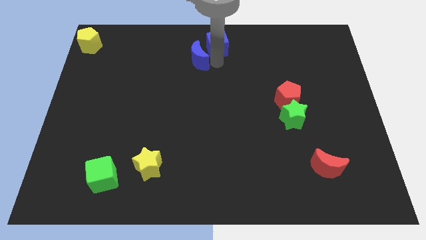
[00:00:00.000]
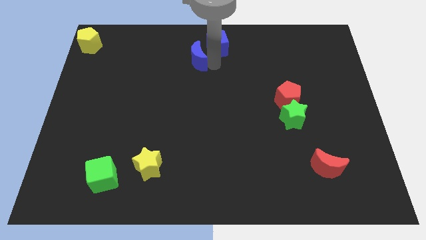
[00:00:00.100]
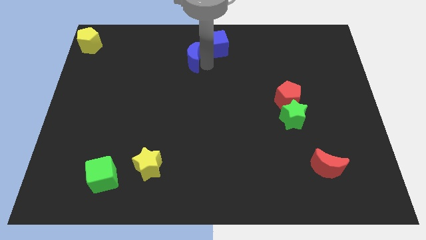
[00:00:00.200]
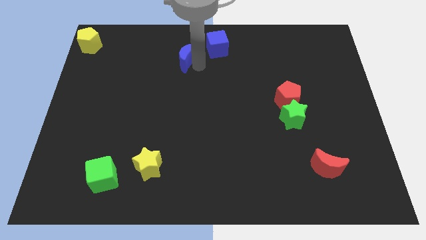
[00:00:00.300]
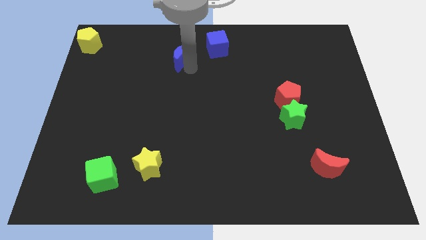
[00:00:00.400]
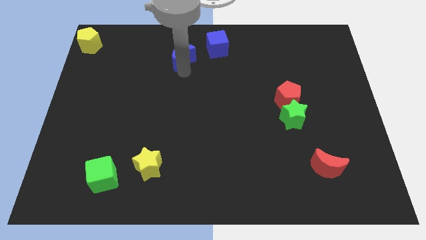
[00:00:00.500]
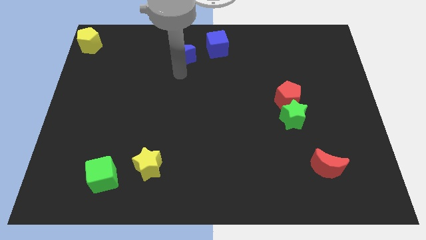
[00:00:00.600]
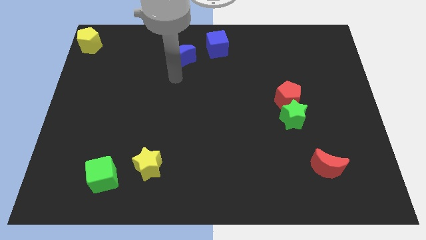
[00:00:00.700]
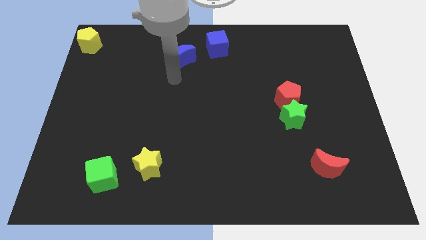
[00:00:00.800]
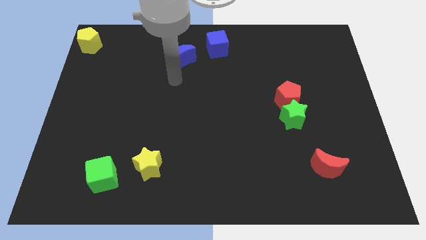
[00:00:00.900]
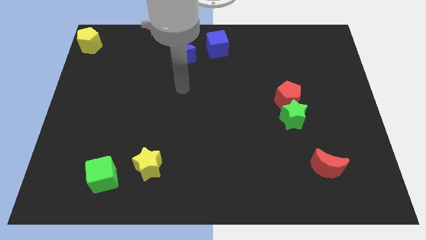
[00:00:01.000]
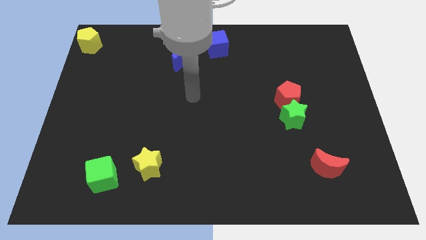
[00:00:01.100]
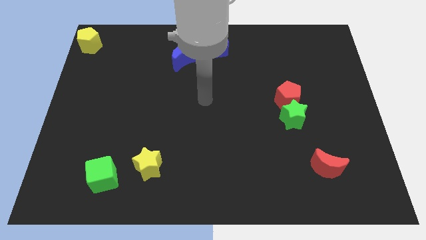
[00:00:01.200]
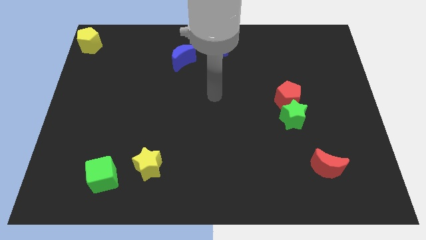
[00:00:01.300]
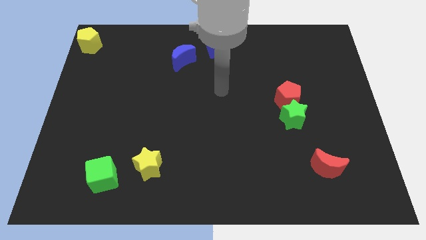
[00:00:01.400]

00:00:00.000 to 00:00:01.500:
separate blue moon from blue cube

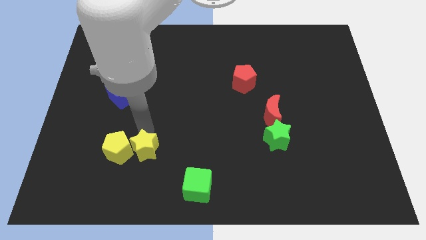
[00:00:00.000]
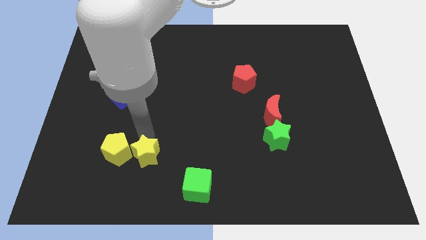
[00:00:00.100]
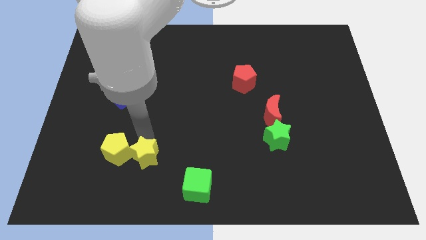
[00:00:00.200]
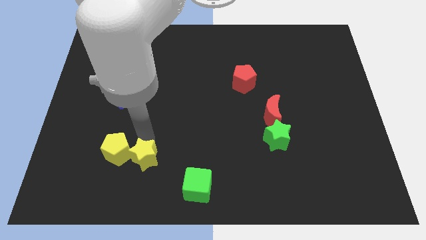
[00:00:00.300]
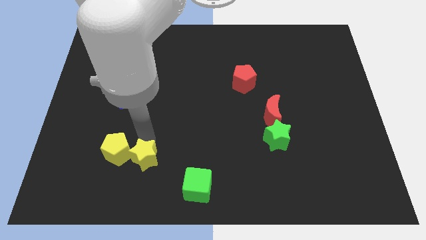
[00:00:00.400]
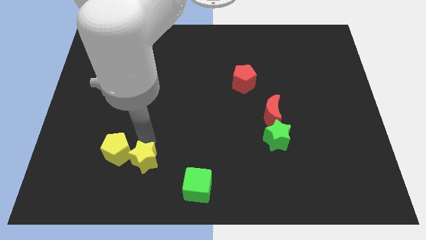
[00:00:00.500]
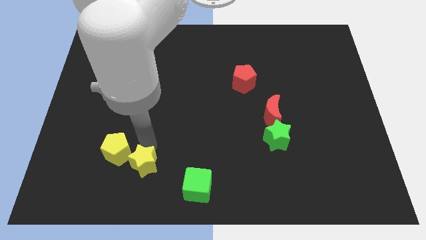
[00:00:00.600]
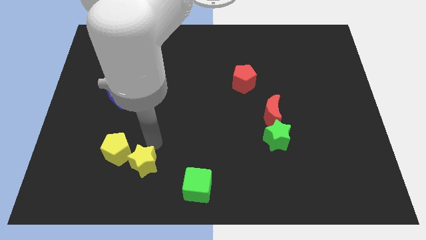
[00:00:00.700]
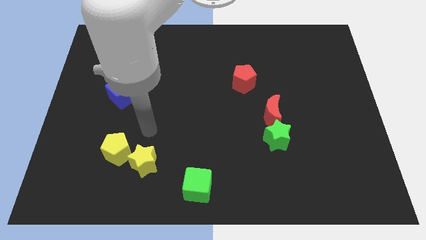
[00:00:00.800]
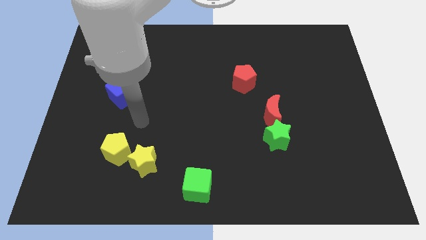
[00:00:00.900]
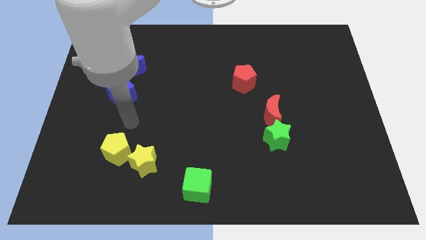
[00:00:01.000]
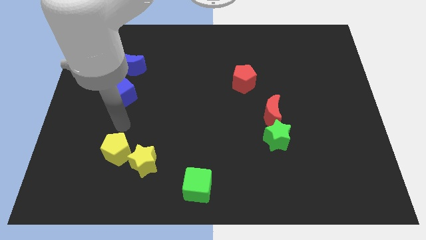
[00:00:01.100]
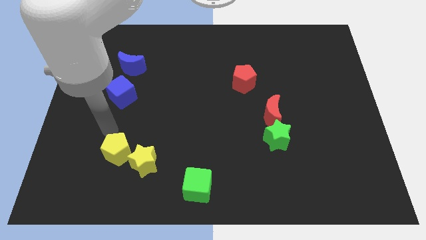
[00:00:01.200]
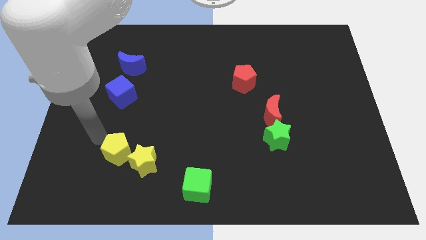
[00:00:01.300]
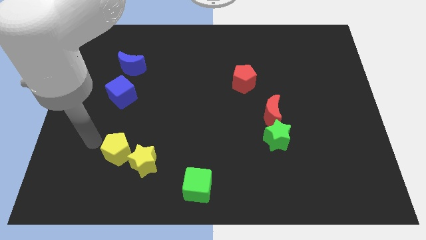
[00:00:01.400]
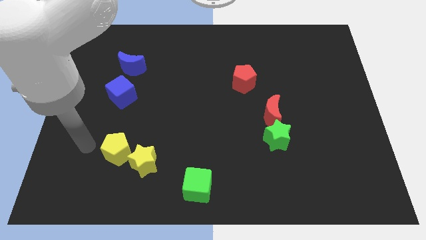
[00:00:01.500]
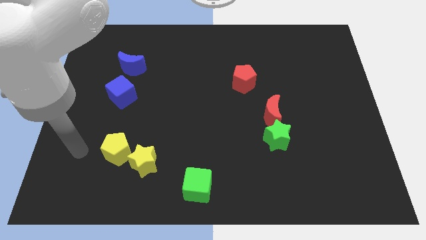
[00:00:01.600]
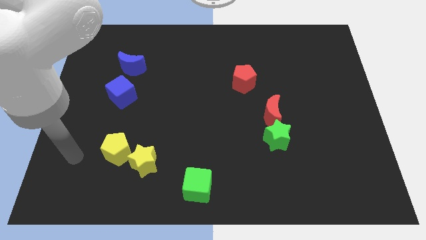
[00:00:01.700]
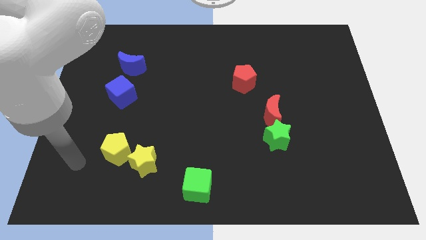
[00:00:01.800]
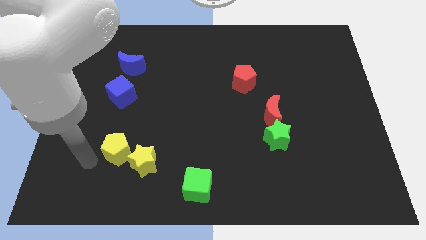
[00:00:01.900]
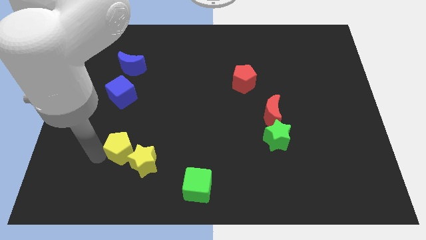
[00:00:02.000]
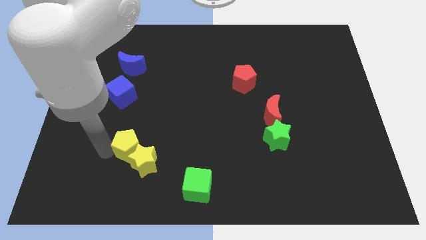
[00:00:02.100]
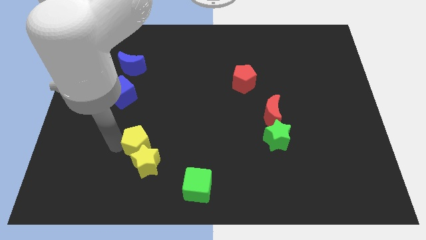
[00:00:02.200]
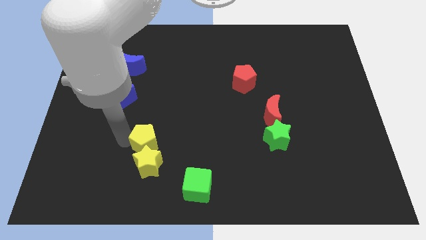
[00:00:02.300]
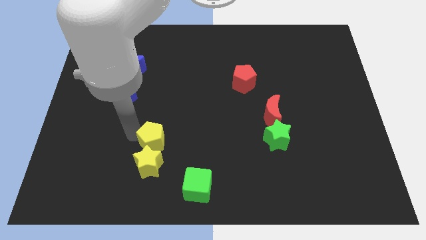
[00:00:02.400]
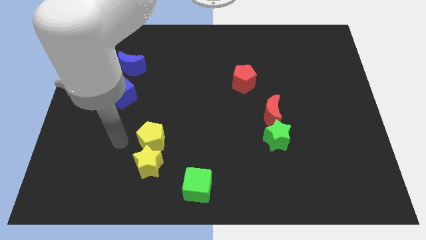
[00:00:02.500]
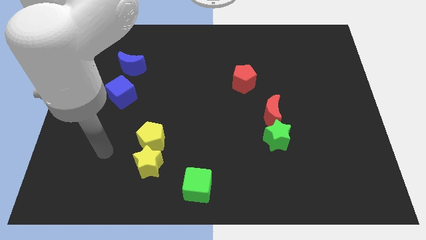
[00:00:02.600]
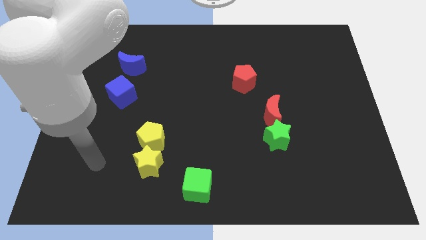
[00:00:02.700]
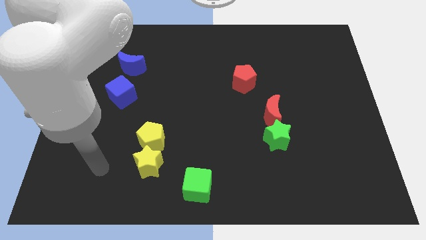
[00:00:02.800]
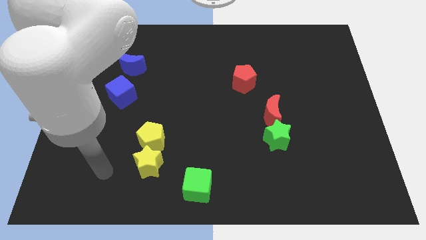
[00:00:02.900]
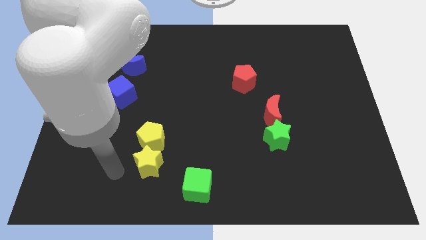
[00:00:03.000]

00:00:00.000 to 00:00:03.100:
place yellow pentagon on top of yellow star

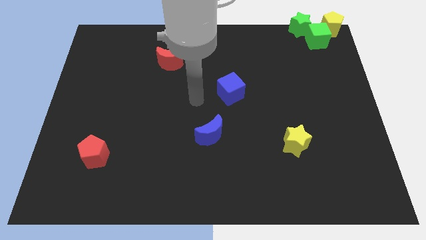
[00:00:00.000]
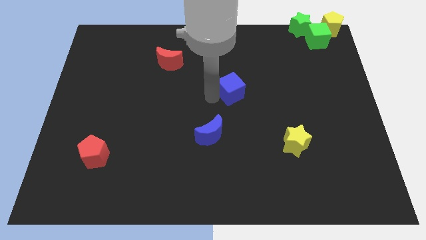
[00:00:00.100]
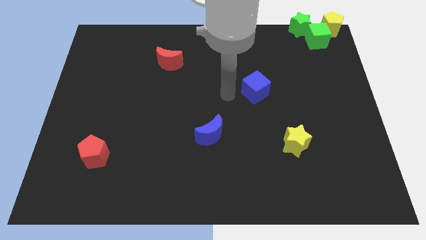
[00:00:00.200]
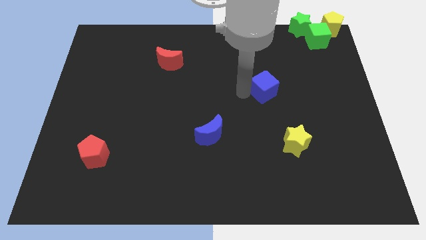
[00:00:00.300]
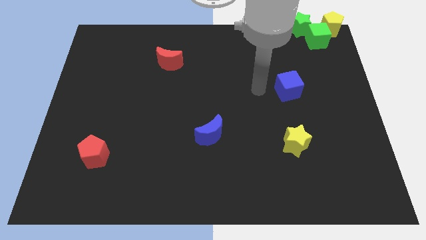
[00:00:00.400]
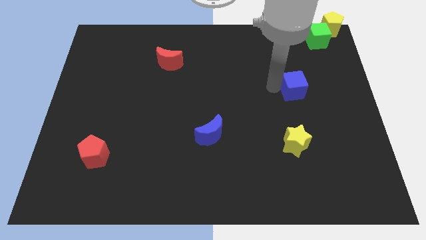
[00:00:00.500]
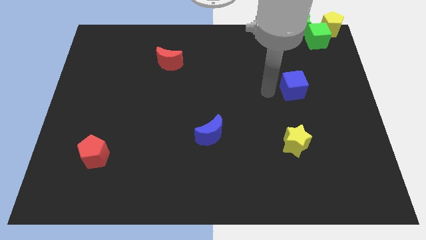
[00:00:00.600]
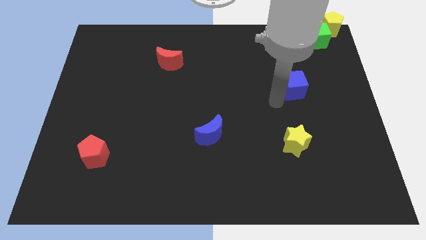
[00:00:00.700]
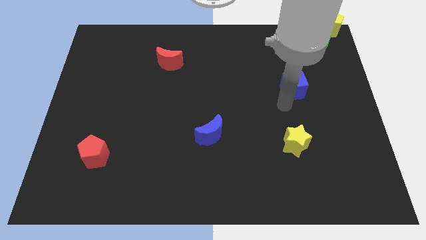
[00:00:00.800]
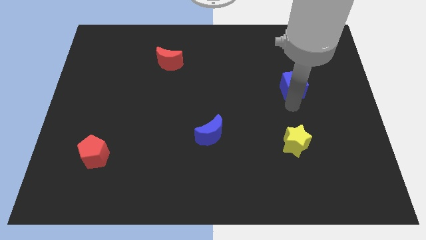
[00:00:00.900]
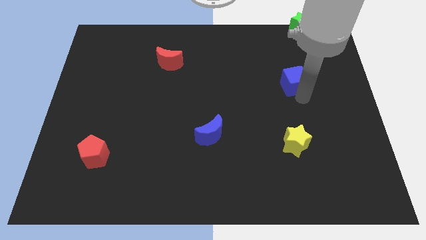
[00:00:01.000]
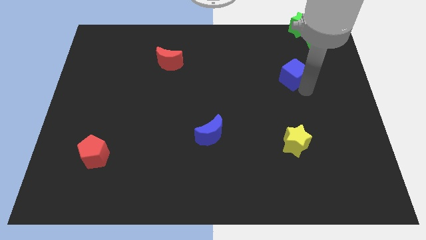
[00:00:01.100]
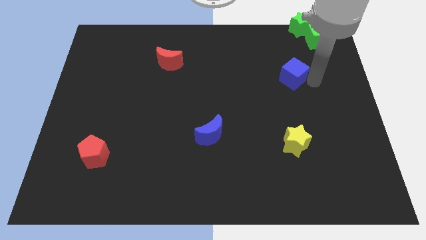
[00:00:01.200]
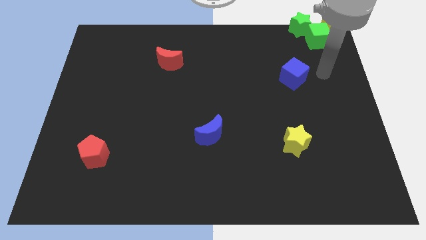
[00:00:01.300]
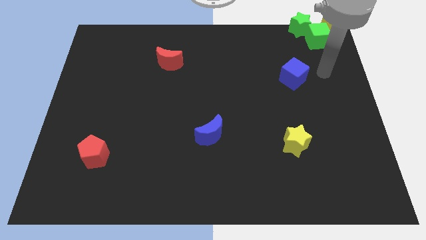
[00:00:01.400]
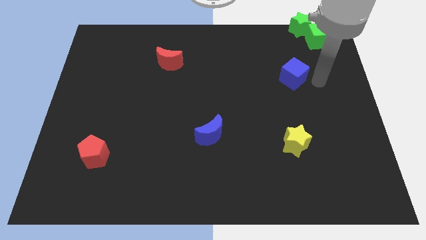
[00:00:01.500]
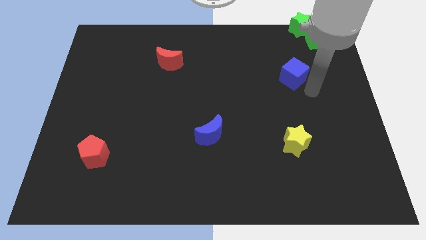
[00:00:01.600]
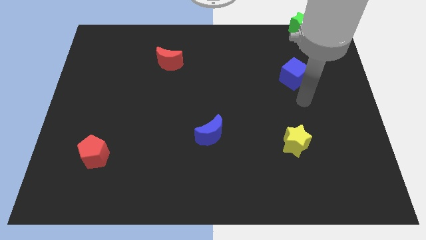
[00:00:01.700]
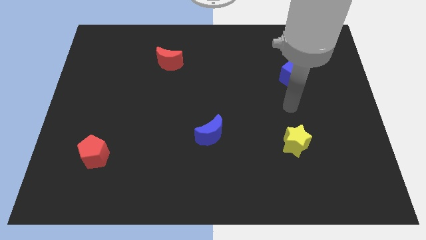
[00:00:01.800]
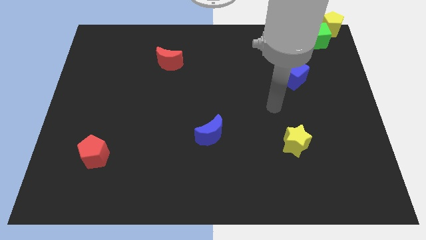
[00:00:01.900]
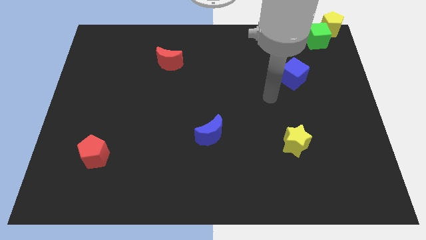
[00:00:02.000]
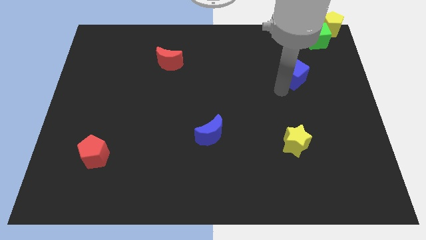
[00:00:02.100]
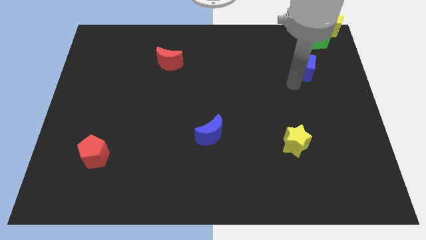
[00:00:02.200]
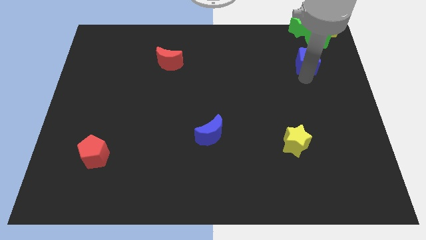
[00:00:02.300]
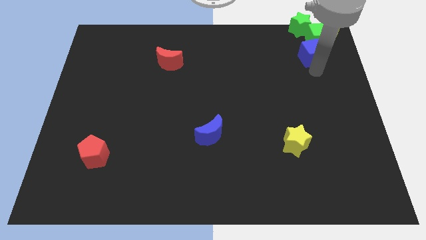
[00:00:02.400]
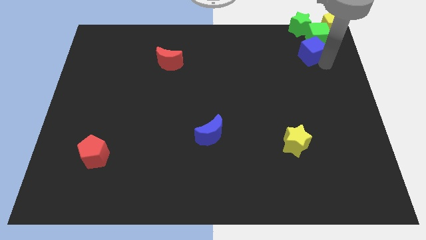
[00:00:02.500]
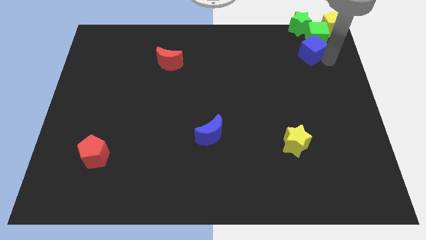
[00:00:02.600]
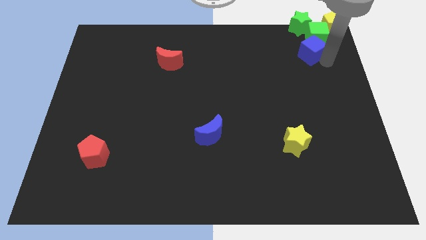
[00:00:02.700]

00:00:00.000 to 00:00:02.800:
attach the blue cube to the green cube

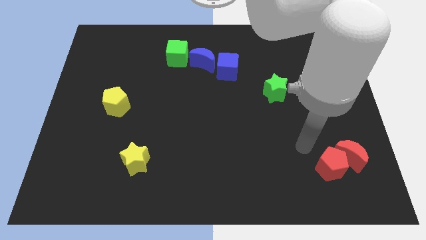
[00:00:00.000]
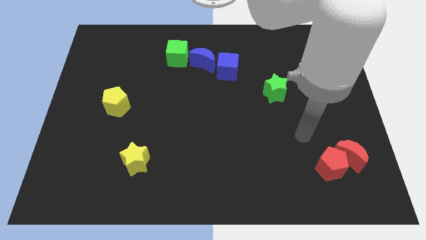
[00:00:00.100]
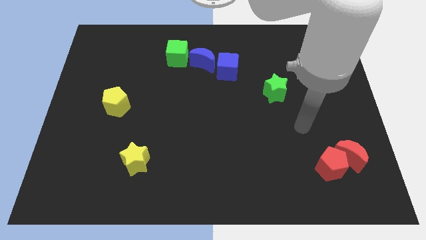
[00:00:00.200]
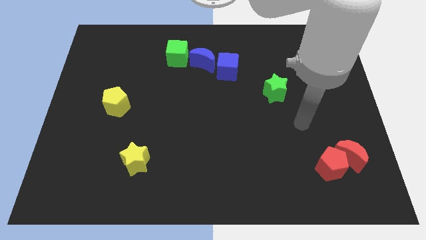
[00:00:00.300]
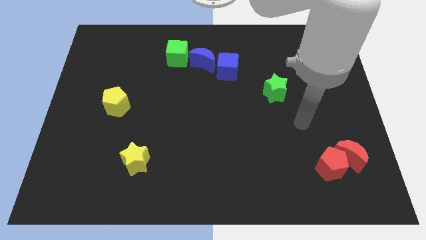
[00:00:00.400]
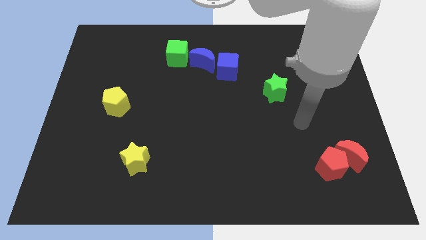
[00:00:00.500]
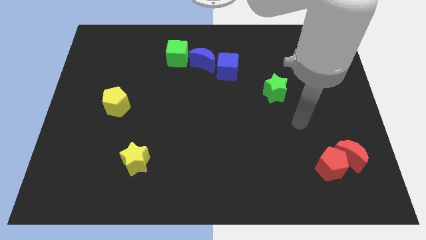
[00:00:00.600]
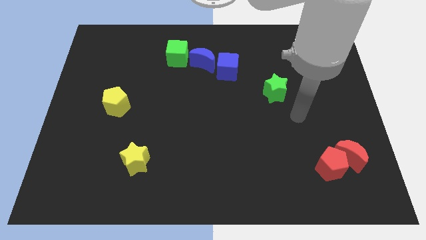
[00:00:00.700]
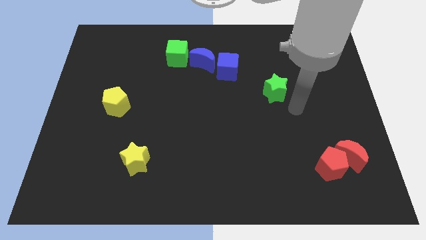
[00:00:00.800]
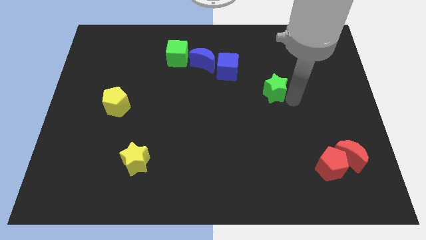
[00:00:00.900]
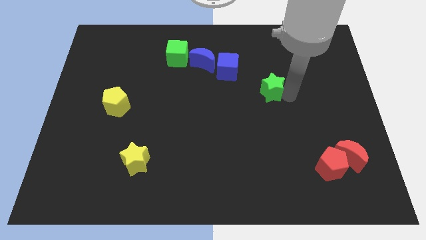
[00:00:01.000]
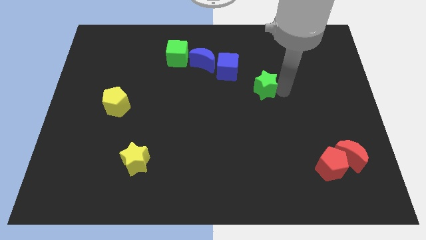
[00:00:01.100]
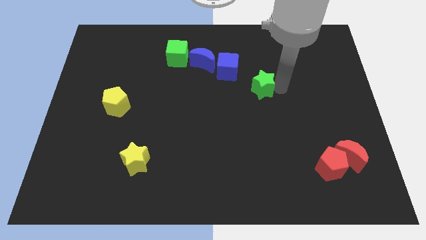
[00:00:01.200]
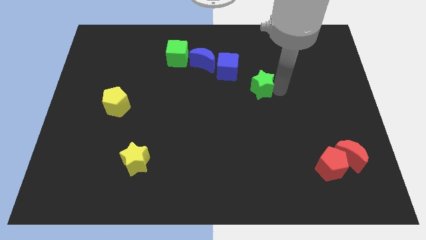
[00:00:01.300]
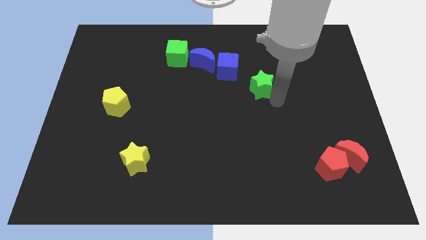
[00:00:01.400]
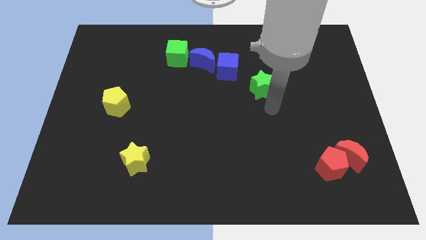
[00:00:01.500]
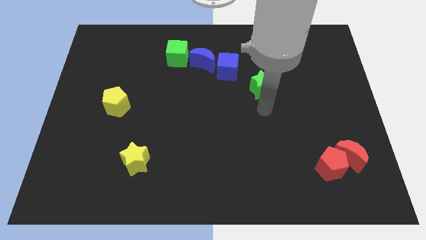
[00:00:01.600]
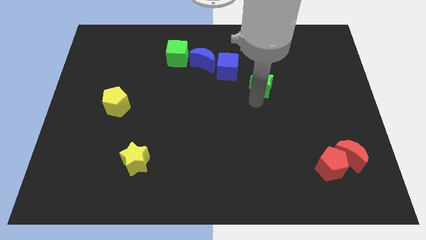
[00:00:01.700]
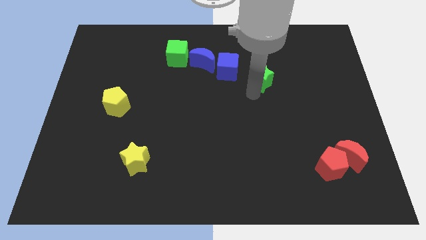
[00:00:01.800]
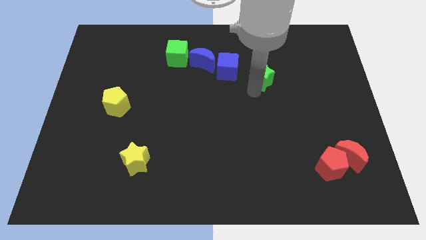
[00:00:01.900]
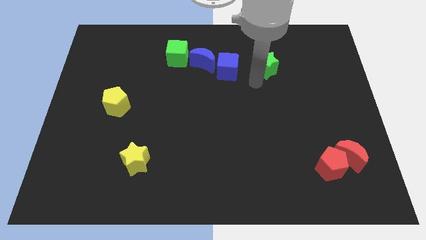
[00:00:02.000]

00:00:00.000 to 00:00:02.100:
move the green star upwards
